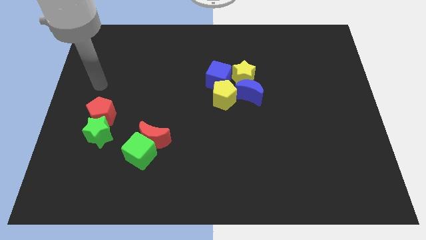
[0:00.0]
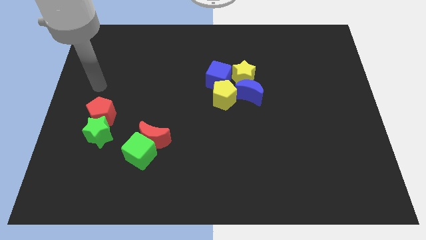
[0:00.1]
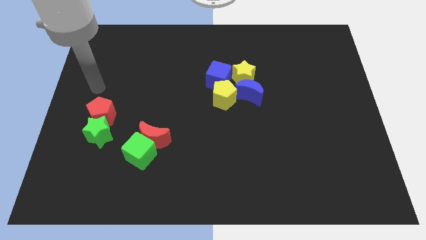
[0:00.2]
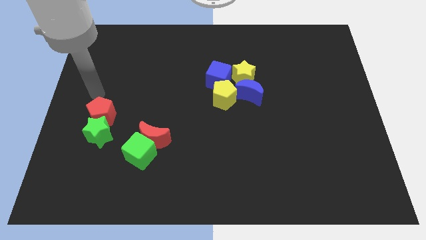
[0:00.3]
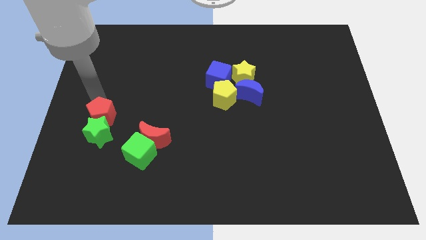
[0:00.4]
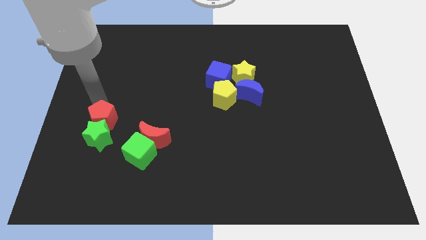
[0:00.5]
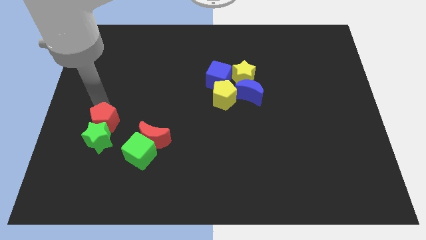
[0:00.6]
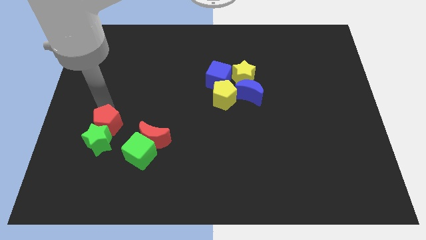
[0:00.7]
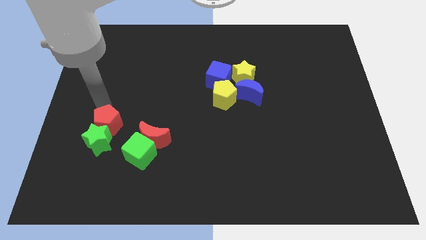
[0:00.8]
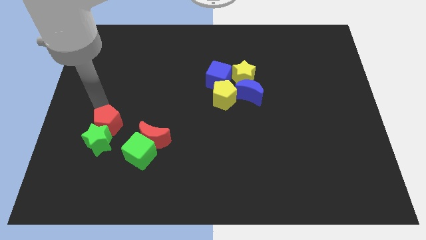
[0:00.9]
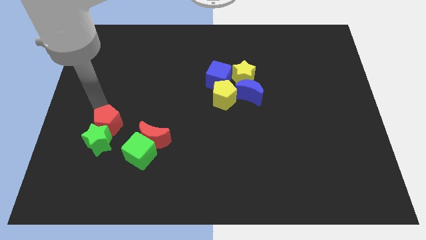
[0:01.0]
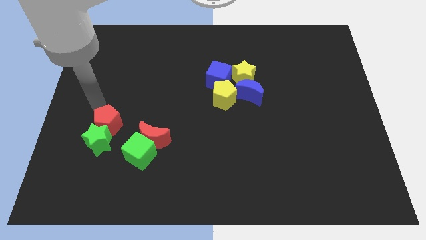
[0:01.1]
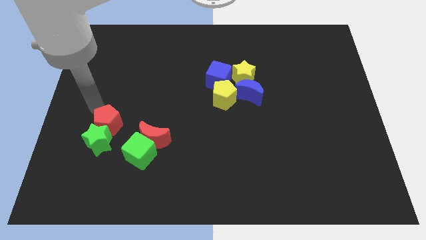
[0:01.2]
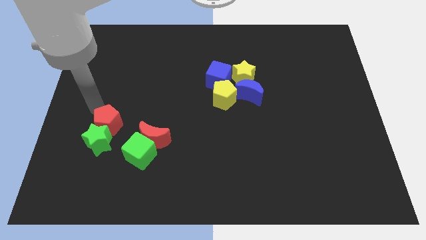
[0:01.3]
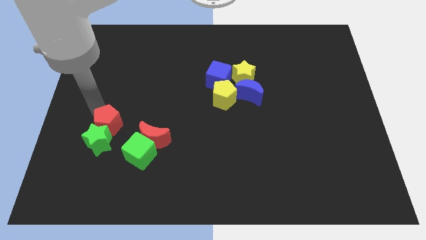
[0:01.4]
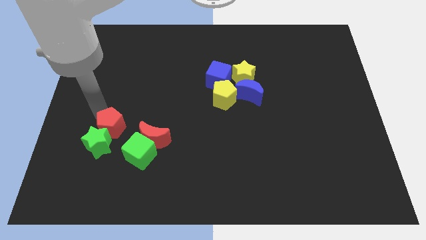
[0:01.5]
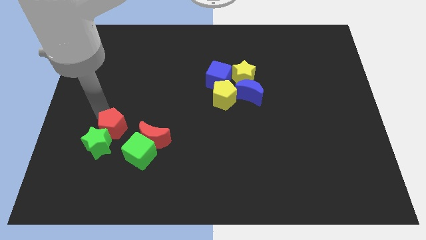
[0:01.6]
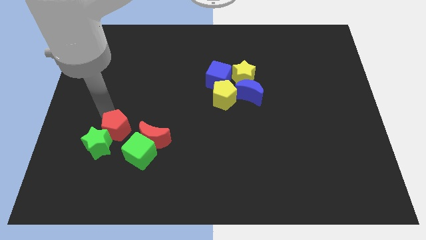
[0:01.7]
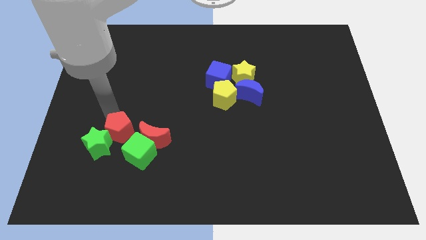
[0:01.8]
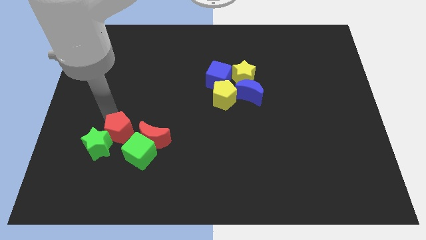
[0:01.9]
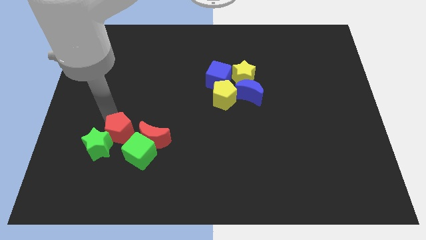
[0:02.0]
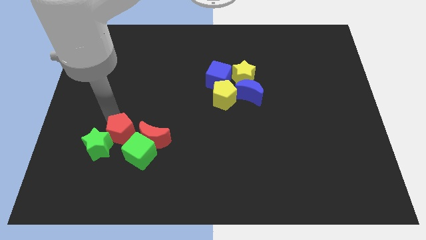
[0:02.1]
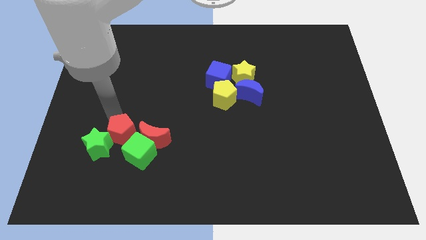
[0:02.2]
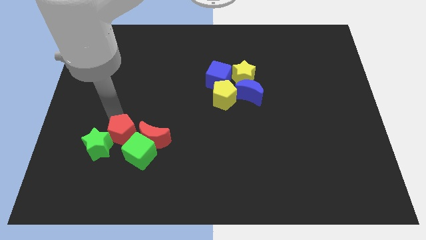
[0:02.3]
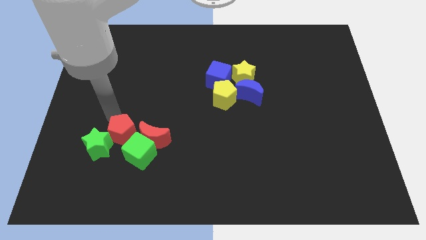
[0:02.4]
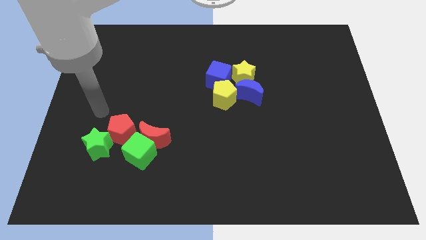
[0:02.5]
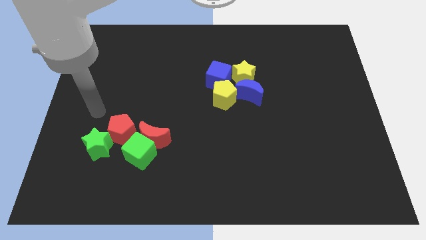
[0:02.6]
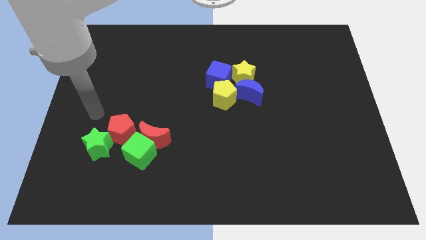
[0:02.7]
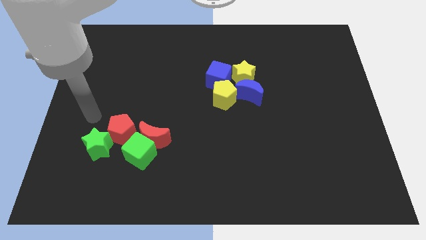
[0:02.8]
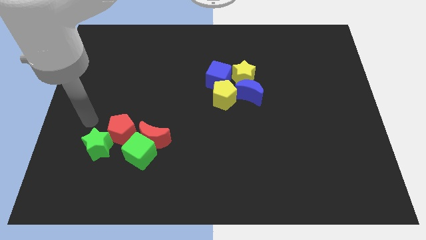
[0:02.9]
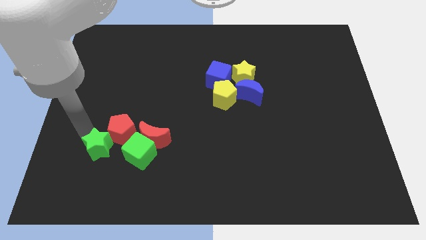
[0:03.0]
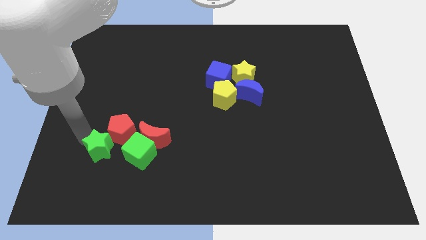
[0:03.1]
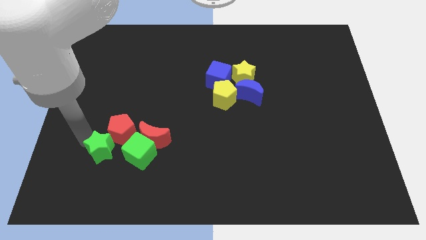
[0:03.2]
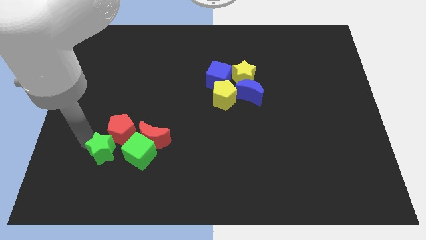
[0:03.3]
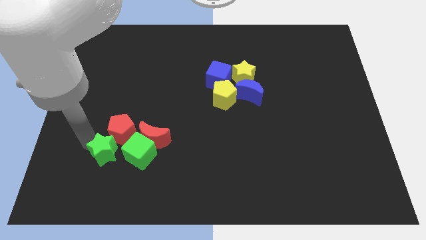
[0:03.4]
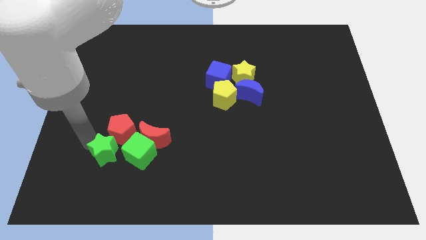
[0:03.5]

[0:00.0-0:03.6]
push the red pentagon and green star towards the red moon and green cube

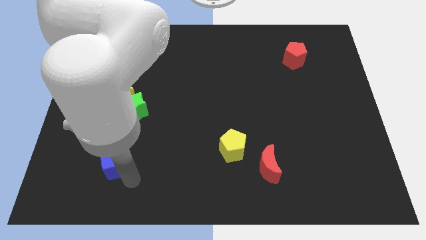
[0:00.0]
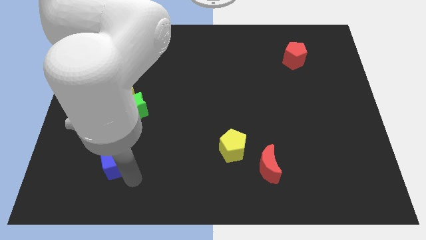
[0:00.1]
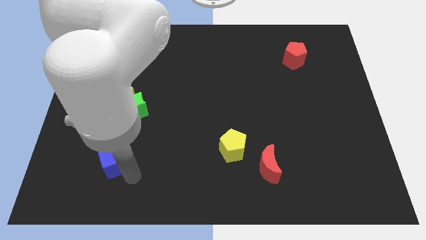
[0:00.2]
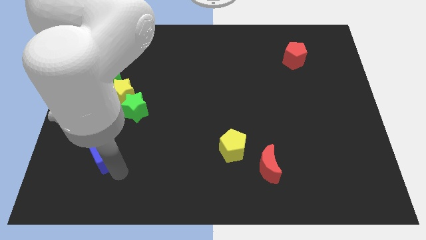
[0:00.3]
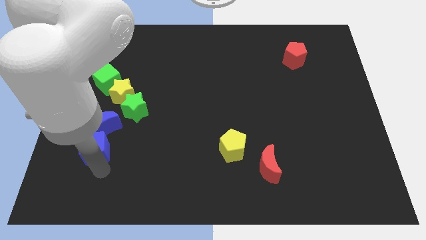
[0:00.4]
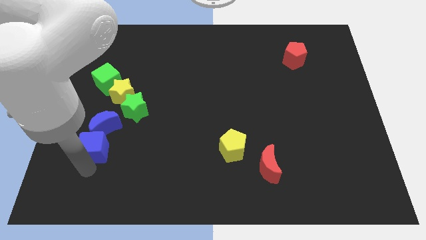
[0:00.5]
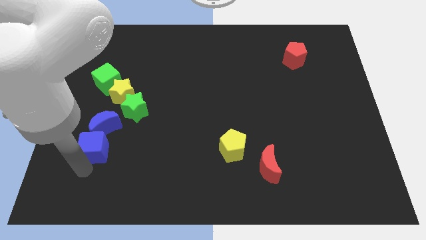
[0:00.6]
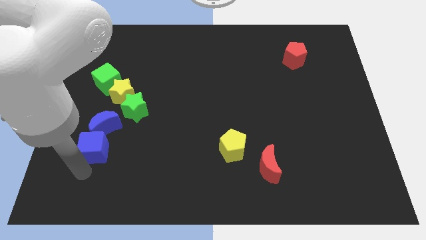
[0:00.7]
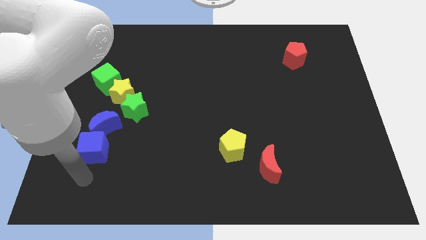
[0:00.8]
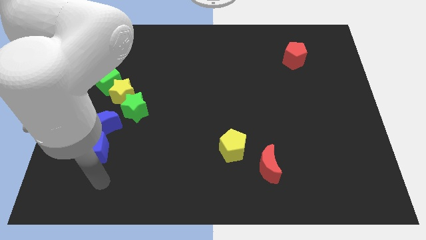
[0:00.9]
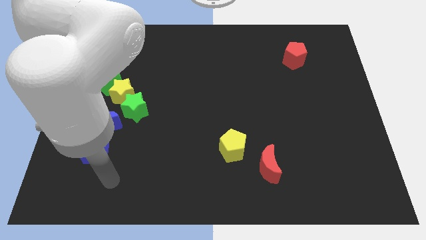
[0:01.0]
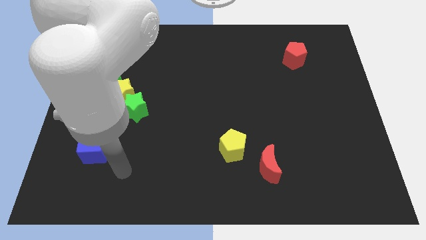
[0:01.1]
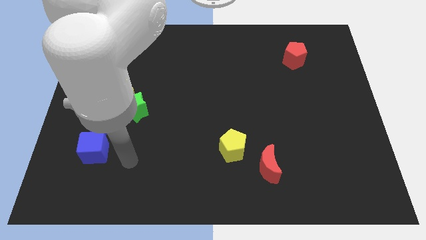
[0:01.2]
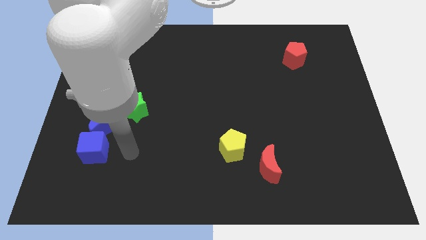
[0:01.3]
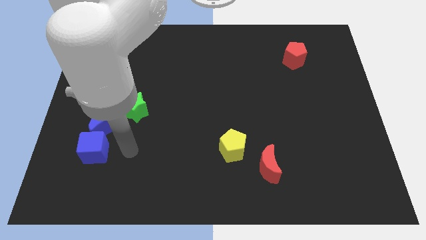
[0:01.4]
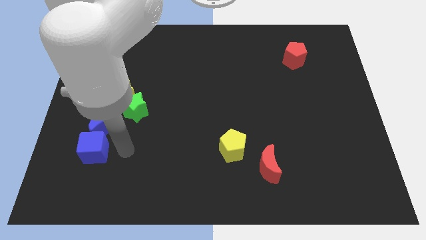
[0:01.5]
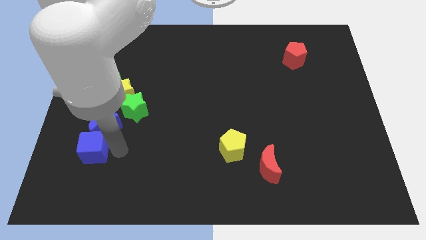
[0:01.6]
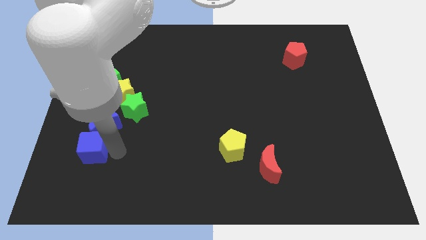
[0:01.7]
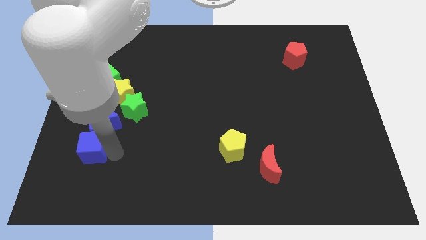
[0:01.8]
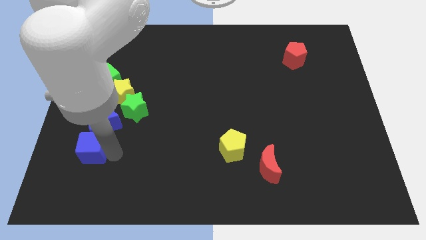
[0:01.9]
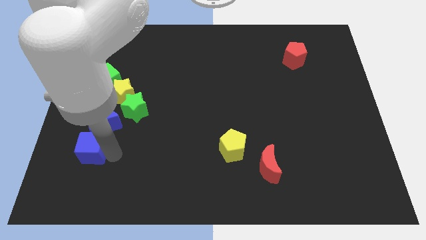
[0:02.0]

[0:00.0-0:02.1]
place blue cube below blue moon

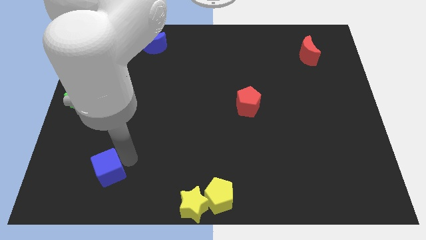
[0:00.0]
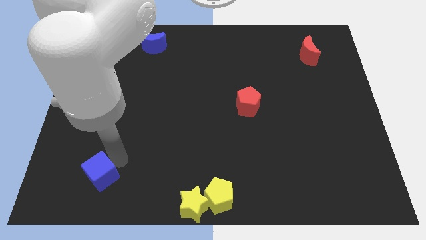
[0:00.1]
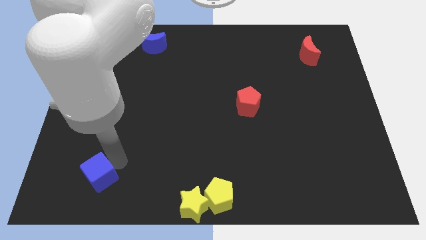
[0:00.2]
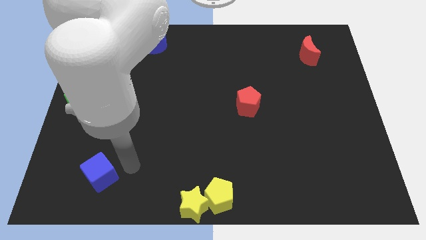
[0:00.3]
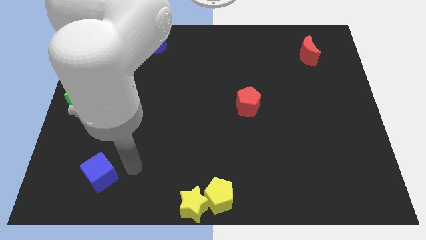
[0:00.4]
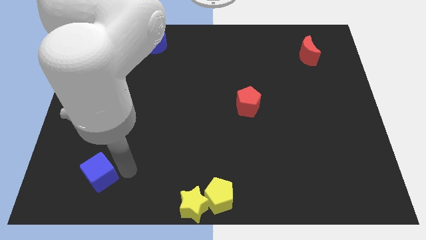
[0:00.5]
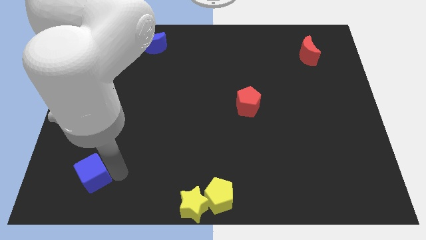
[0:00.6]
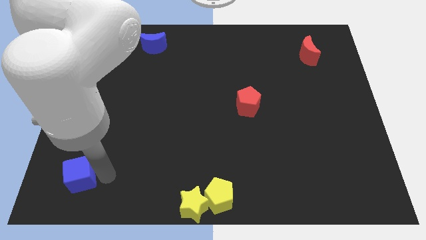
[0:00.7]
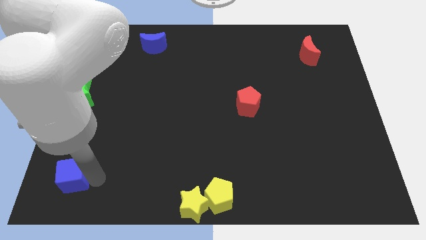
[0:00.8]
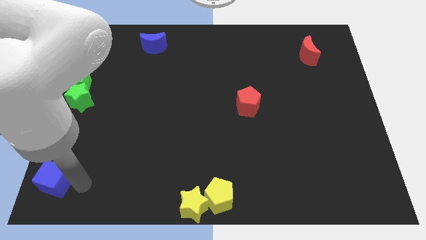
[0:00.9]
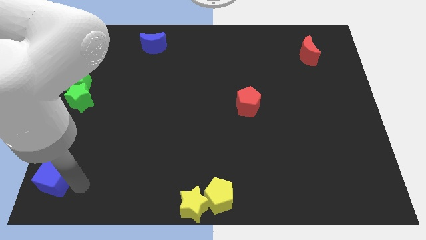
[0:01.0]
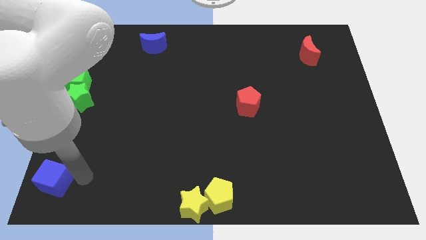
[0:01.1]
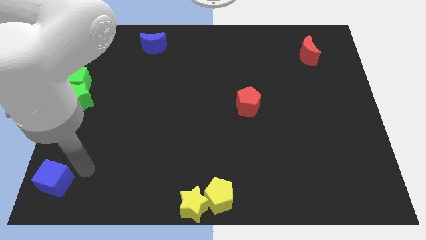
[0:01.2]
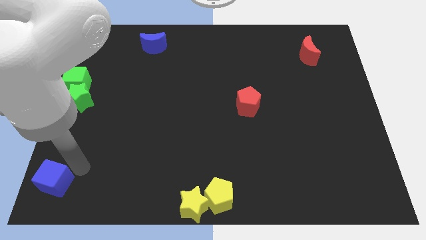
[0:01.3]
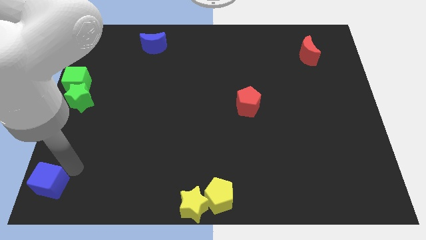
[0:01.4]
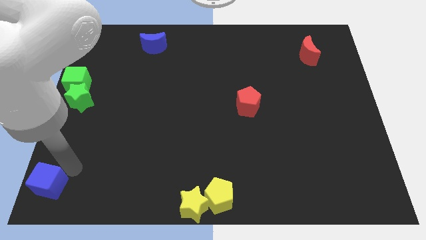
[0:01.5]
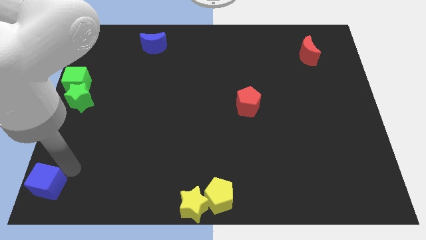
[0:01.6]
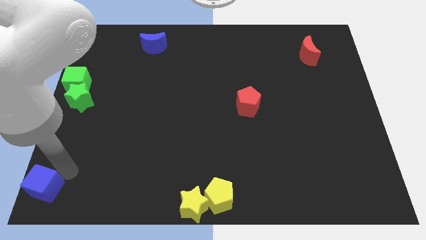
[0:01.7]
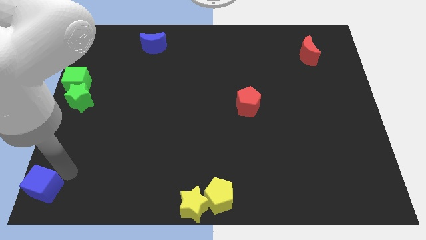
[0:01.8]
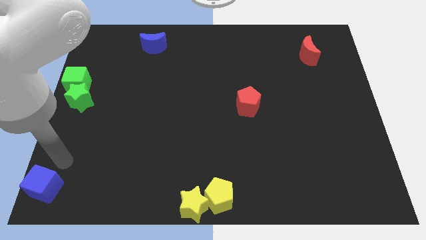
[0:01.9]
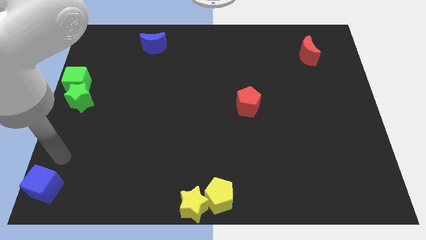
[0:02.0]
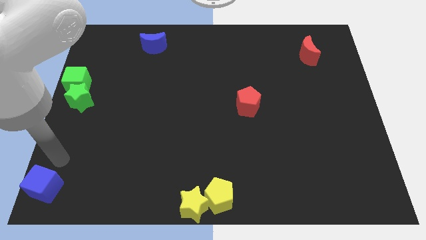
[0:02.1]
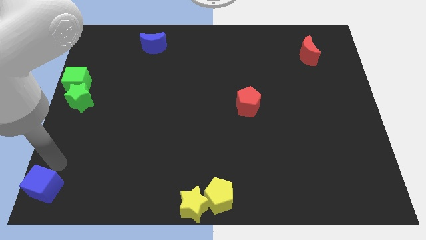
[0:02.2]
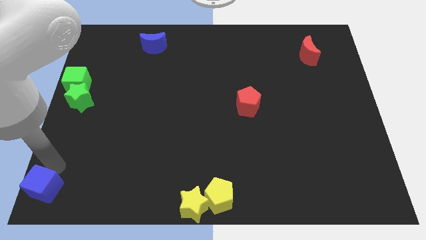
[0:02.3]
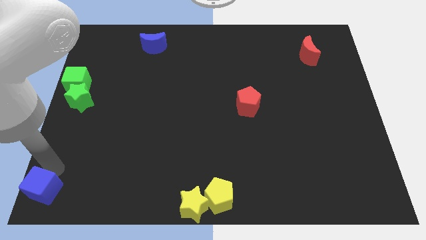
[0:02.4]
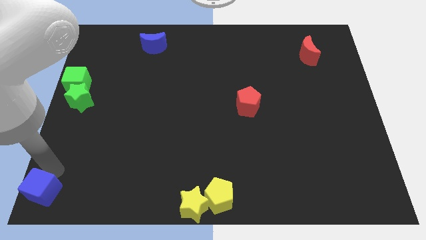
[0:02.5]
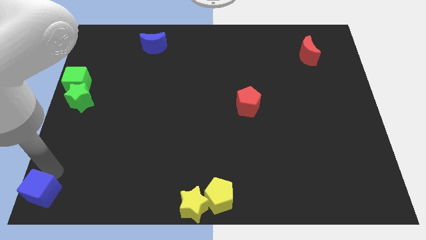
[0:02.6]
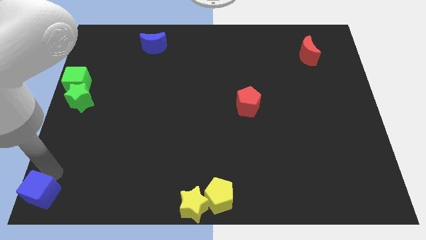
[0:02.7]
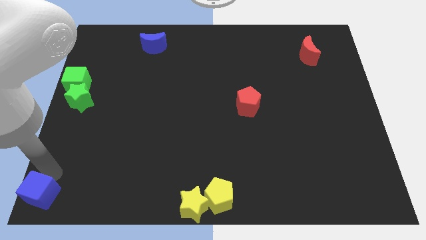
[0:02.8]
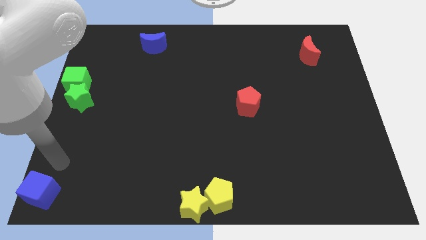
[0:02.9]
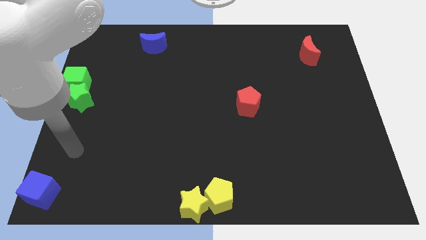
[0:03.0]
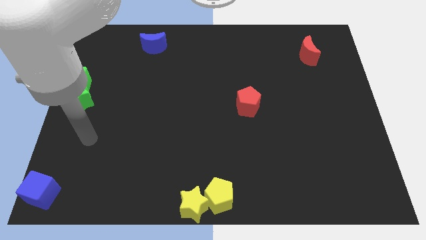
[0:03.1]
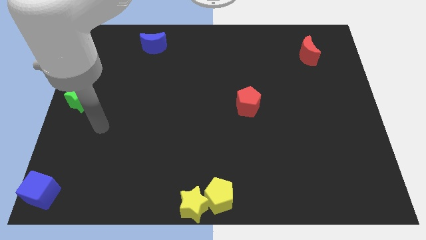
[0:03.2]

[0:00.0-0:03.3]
put the blue cube to the center left corner of the board
